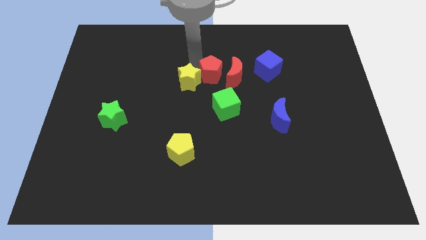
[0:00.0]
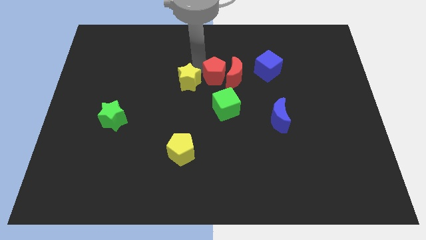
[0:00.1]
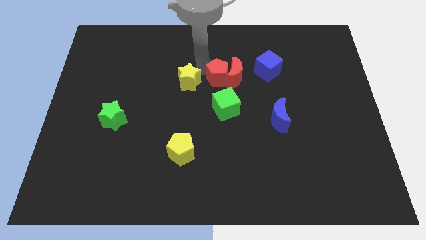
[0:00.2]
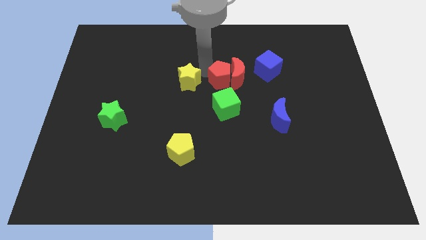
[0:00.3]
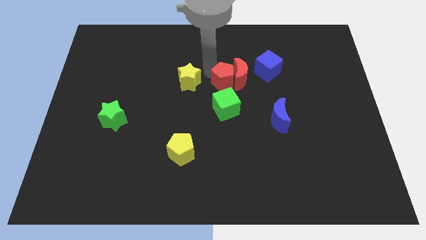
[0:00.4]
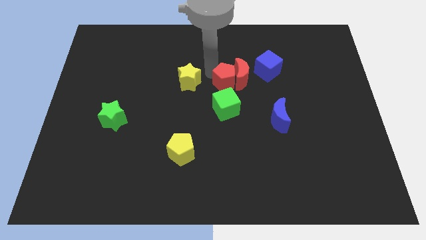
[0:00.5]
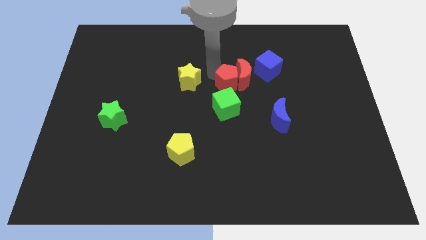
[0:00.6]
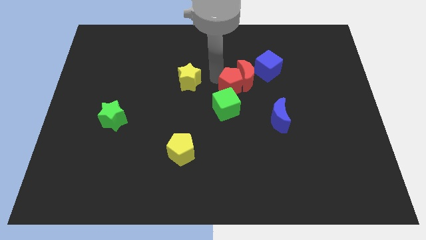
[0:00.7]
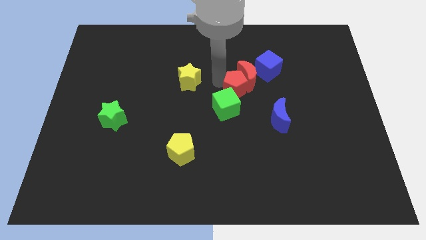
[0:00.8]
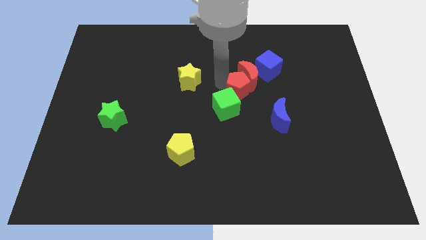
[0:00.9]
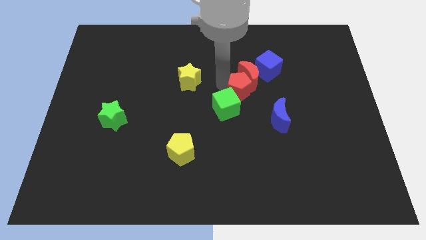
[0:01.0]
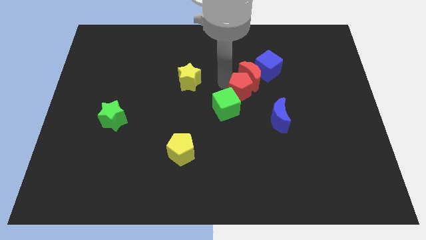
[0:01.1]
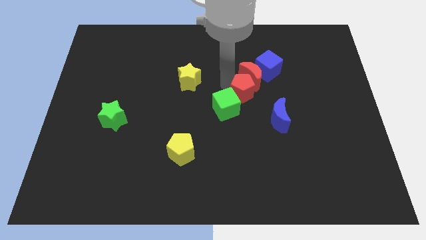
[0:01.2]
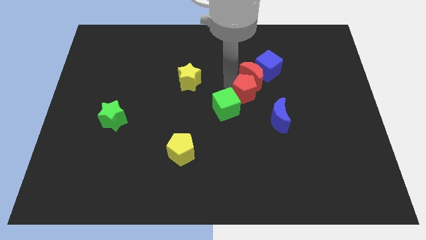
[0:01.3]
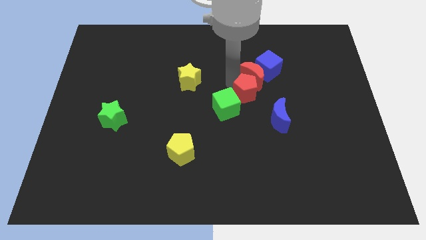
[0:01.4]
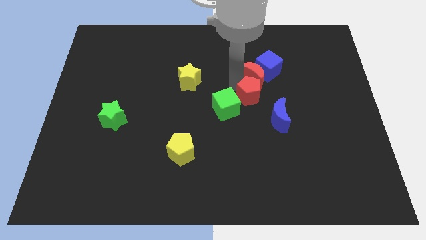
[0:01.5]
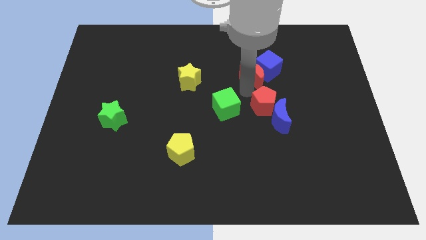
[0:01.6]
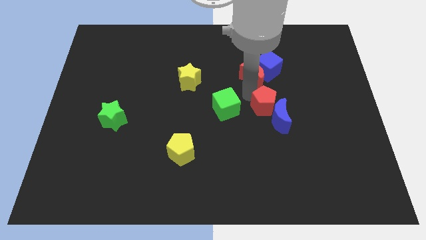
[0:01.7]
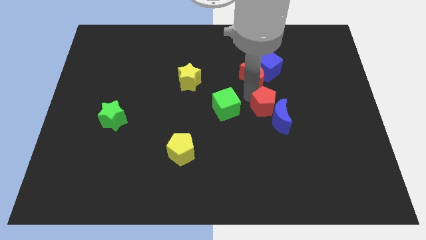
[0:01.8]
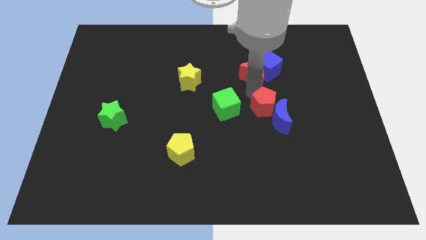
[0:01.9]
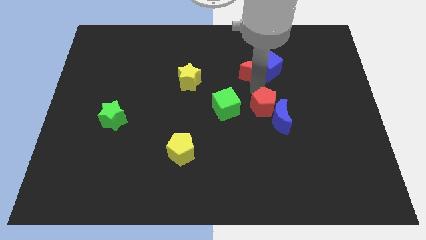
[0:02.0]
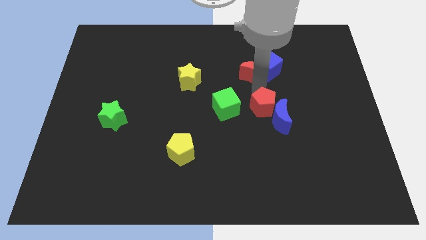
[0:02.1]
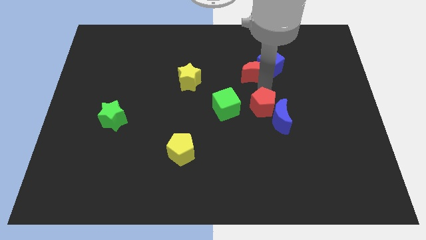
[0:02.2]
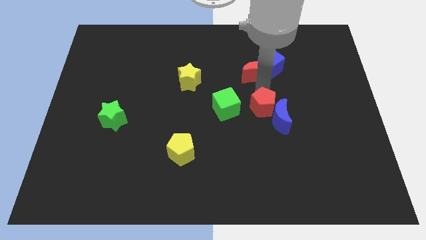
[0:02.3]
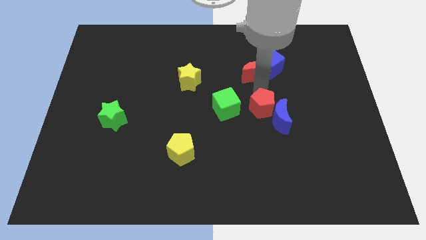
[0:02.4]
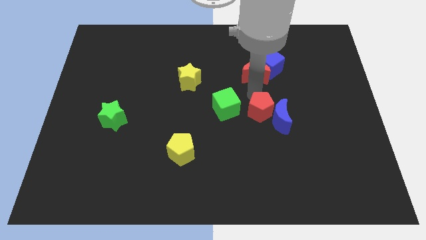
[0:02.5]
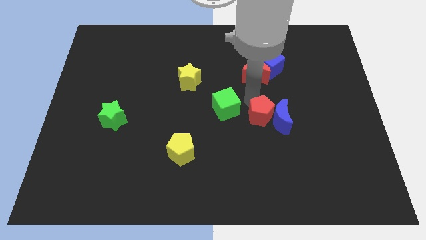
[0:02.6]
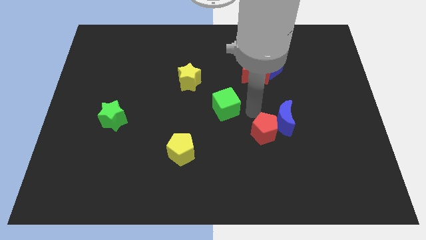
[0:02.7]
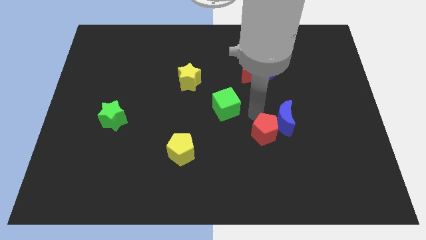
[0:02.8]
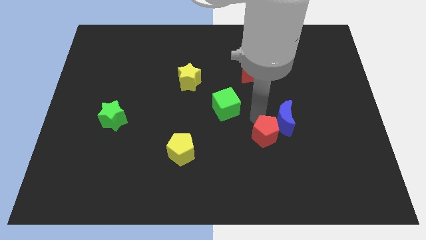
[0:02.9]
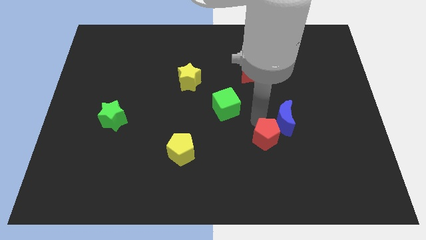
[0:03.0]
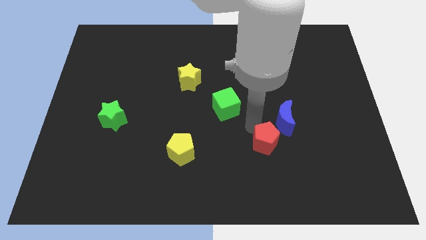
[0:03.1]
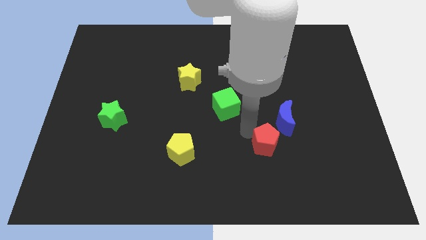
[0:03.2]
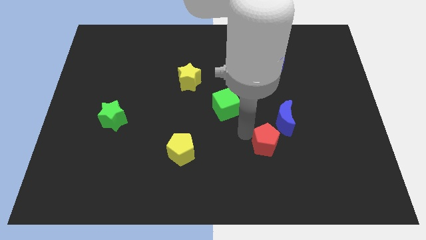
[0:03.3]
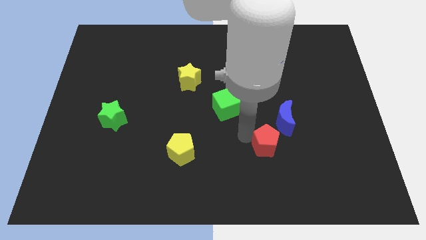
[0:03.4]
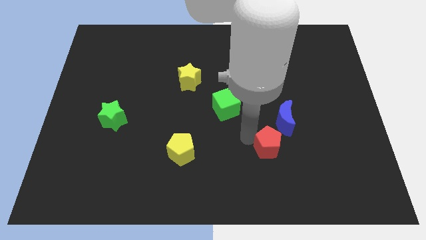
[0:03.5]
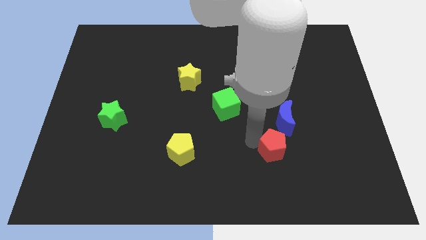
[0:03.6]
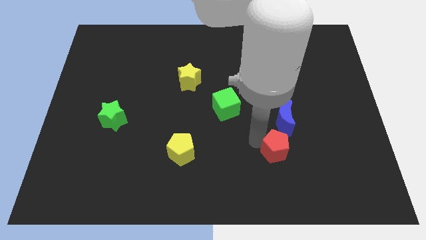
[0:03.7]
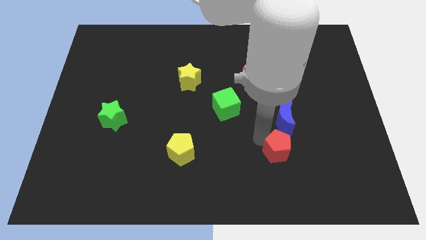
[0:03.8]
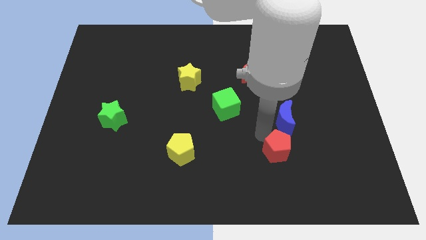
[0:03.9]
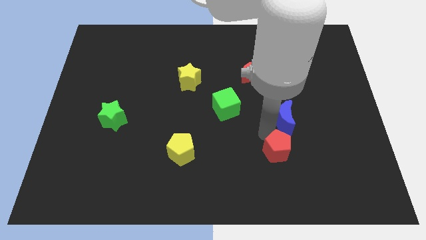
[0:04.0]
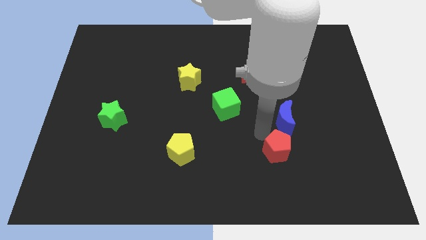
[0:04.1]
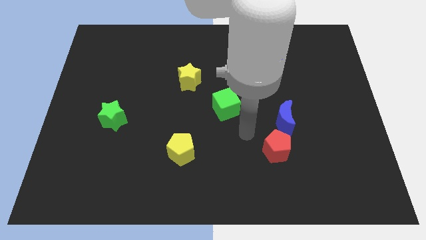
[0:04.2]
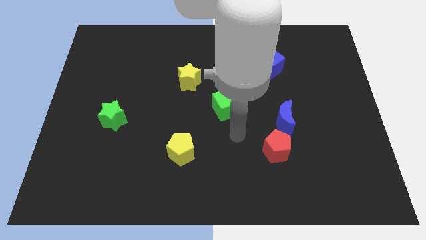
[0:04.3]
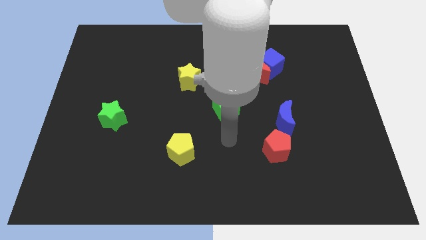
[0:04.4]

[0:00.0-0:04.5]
push the red pentagon to the bottom of the blue crescent

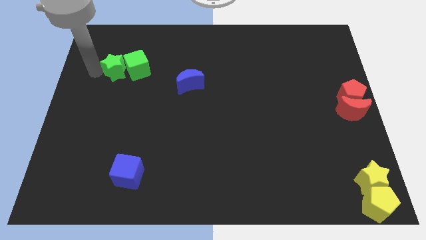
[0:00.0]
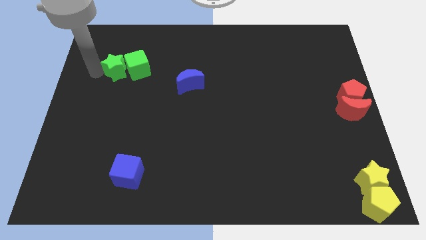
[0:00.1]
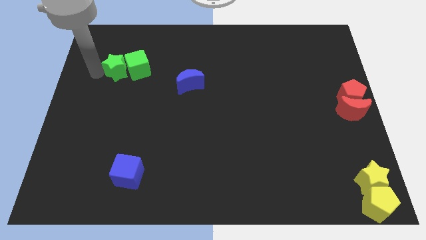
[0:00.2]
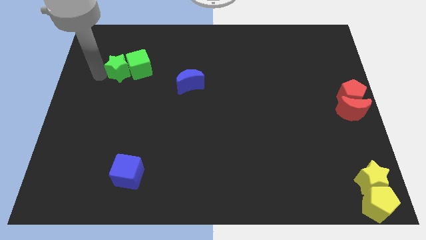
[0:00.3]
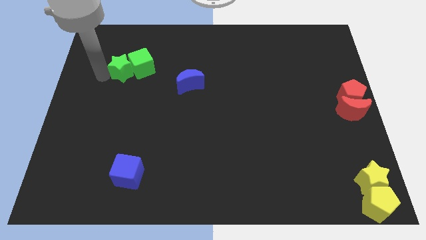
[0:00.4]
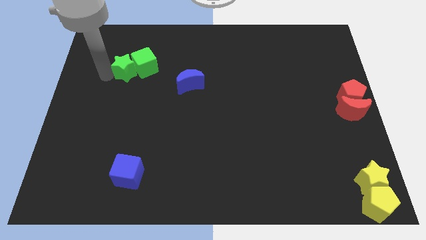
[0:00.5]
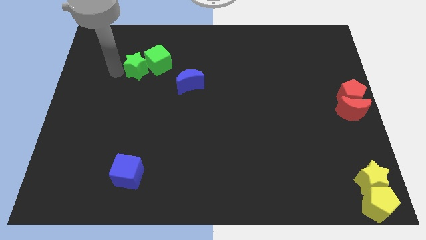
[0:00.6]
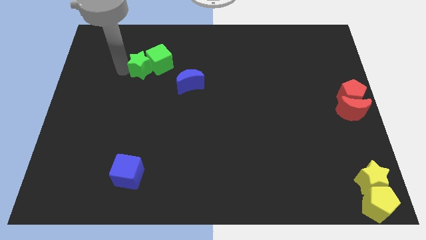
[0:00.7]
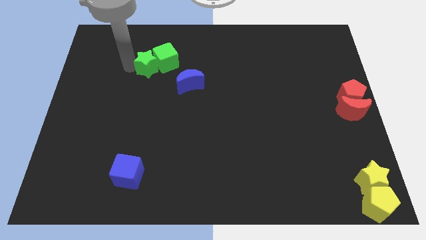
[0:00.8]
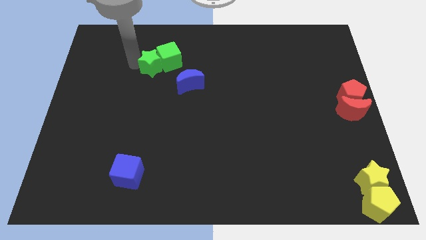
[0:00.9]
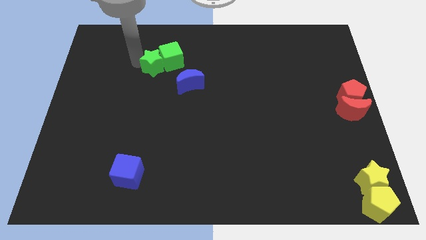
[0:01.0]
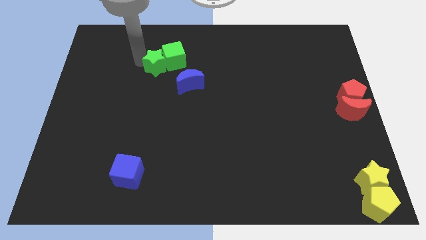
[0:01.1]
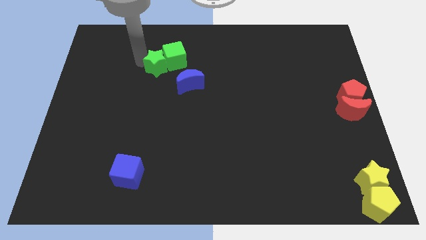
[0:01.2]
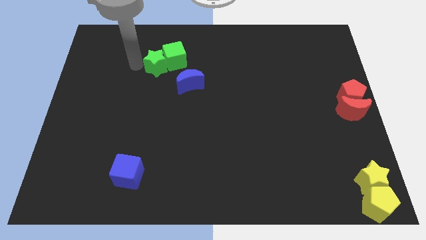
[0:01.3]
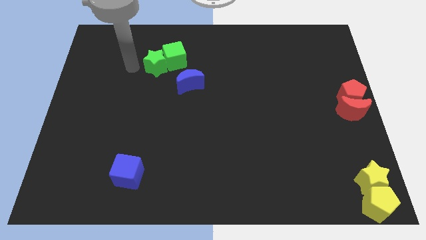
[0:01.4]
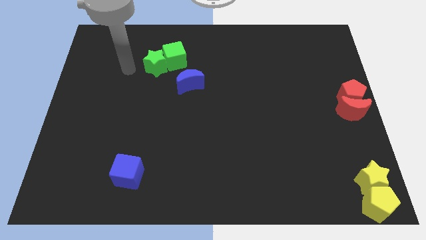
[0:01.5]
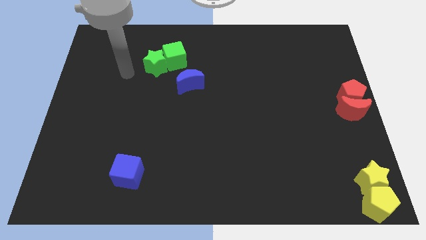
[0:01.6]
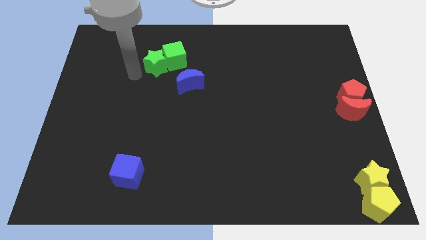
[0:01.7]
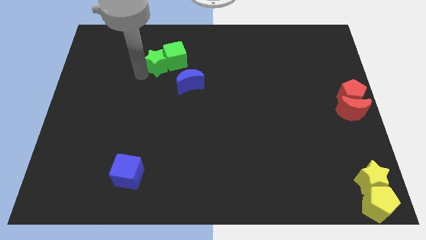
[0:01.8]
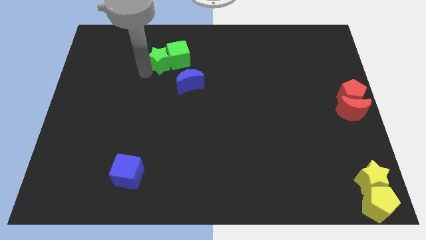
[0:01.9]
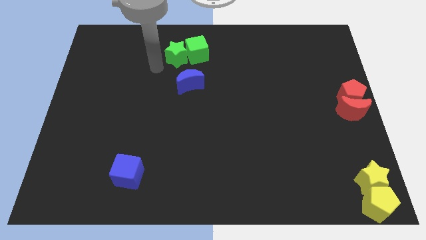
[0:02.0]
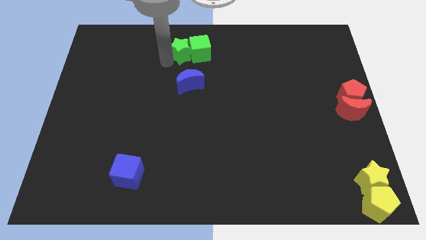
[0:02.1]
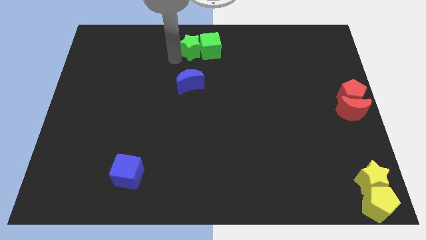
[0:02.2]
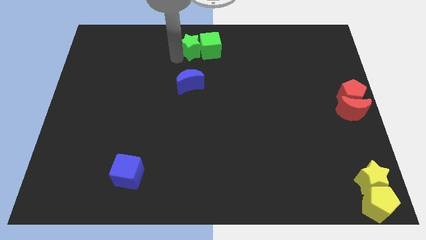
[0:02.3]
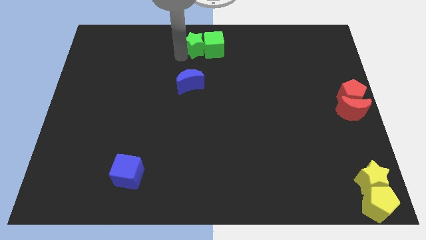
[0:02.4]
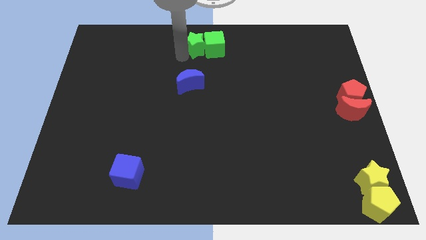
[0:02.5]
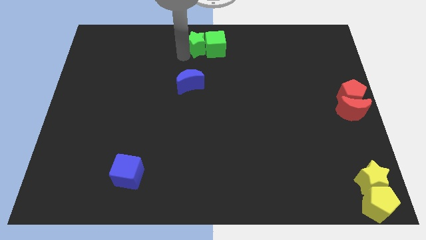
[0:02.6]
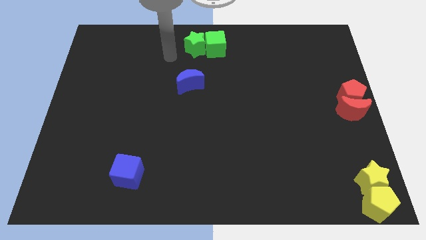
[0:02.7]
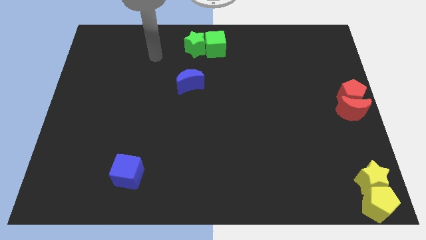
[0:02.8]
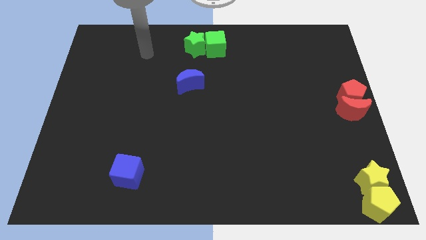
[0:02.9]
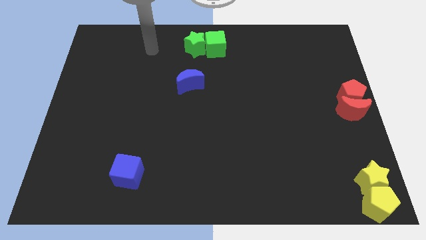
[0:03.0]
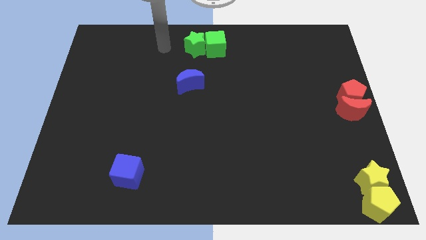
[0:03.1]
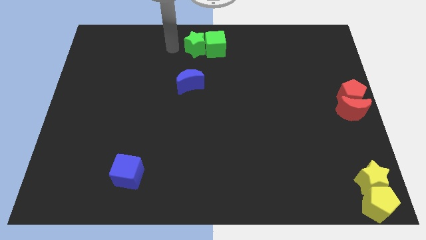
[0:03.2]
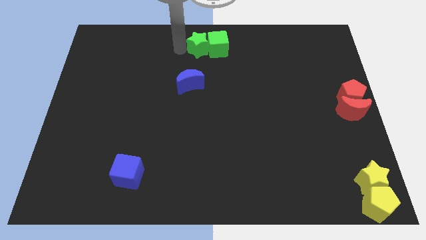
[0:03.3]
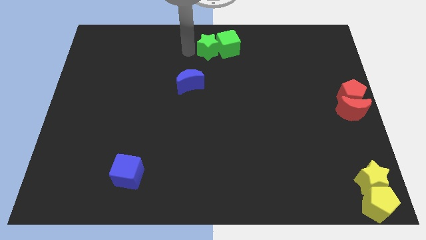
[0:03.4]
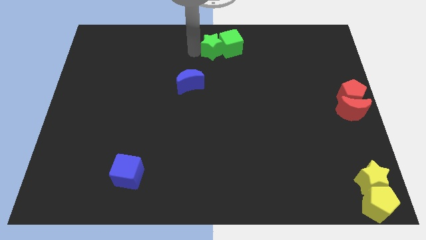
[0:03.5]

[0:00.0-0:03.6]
push the green star along with the green cube to the top centre of the board

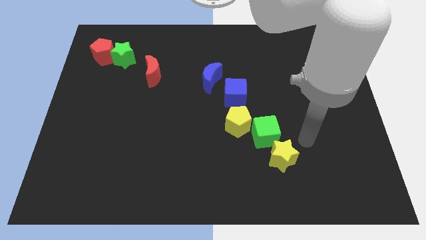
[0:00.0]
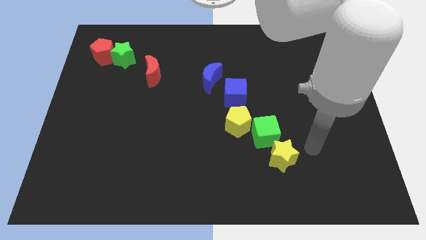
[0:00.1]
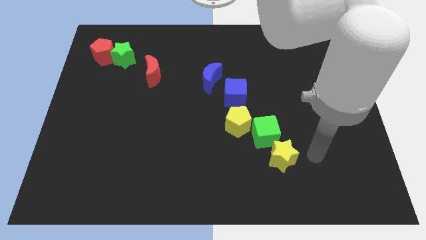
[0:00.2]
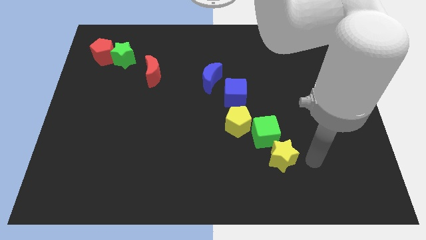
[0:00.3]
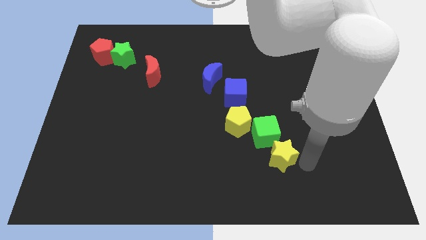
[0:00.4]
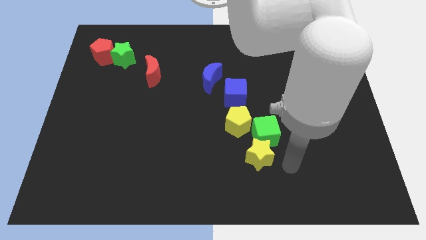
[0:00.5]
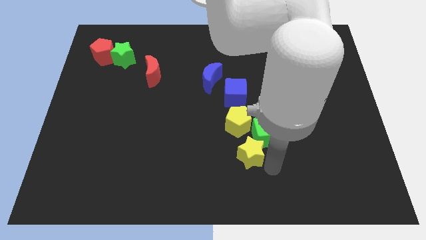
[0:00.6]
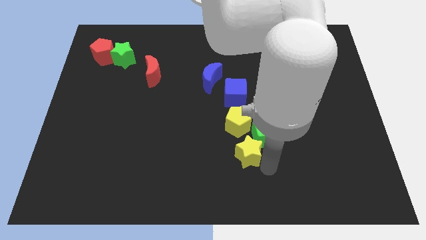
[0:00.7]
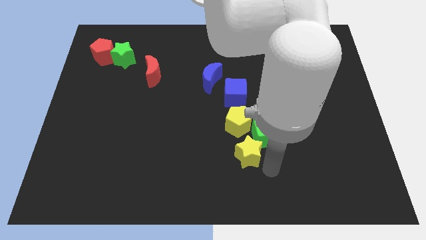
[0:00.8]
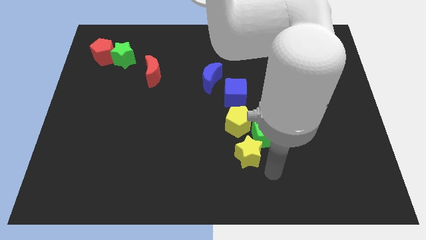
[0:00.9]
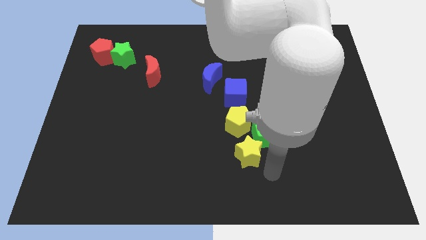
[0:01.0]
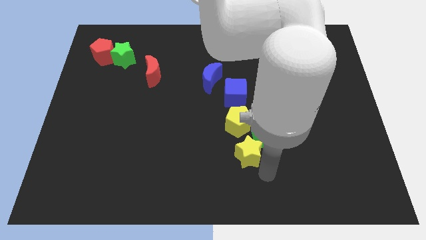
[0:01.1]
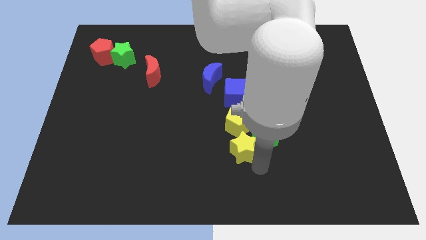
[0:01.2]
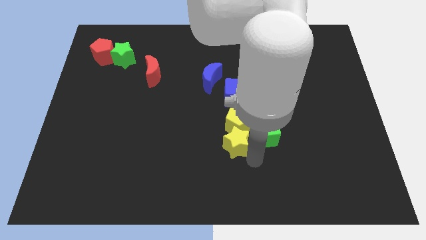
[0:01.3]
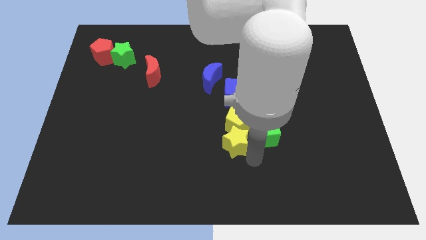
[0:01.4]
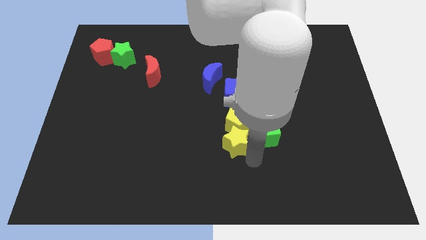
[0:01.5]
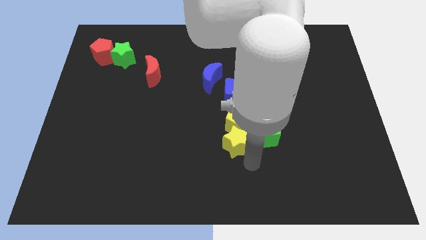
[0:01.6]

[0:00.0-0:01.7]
slide the yellow star to the bottom of the yellow pentagon
